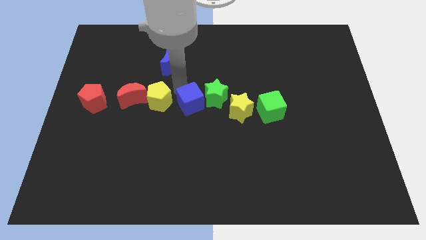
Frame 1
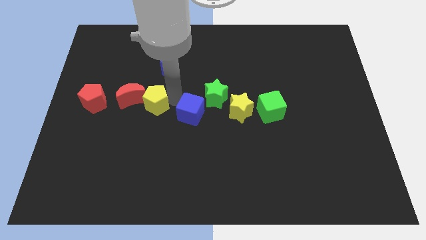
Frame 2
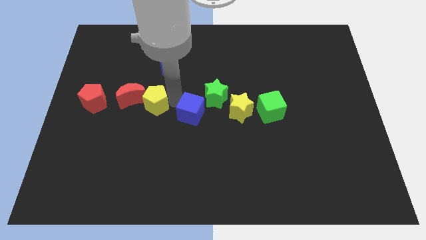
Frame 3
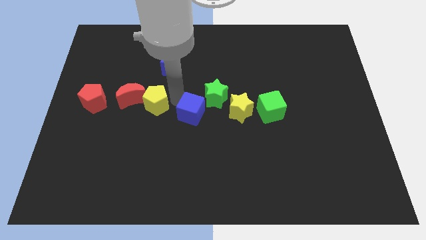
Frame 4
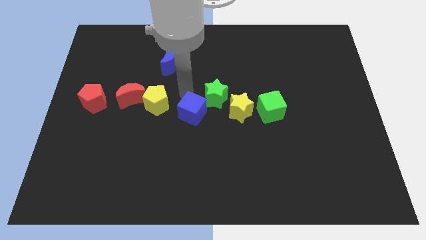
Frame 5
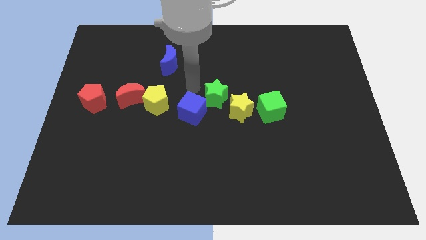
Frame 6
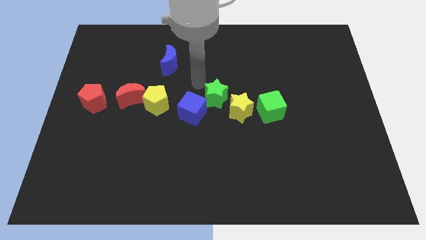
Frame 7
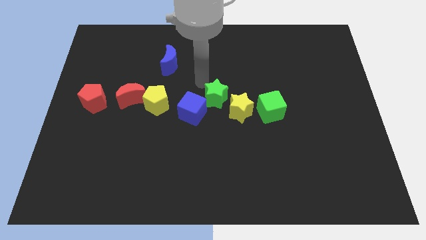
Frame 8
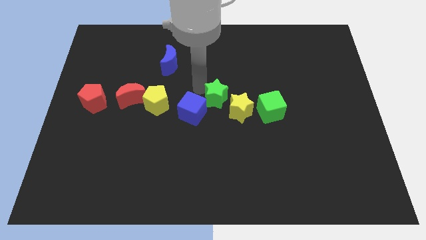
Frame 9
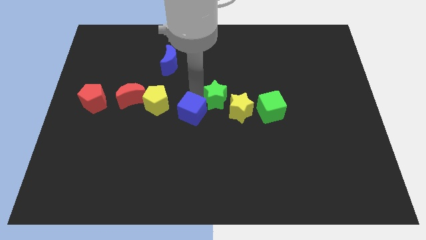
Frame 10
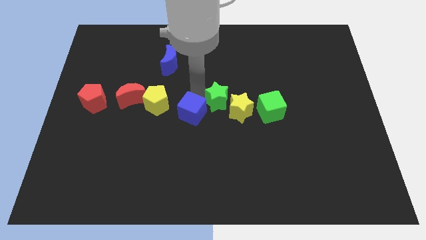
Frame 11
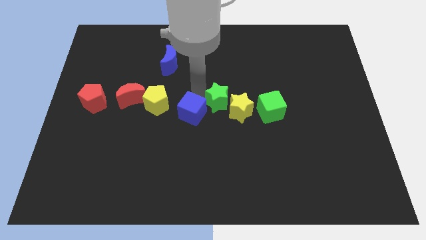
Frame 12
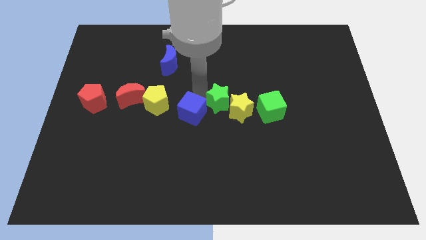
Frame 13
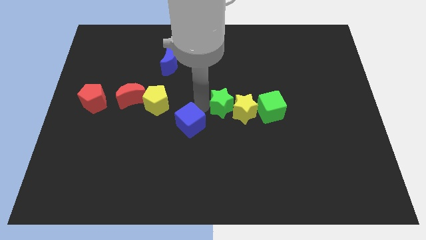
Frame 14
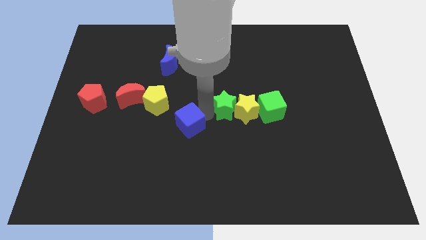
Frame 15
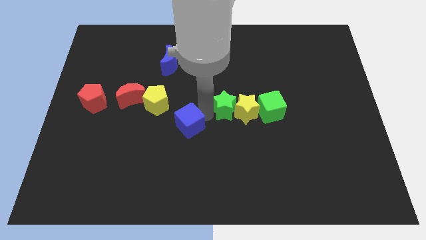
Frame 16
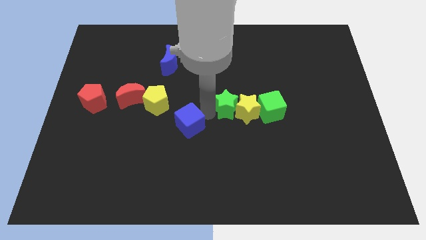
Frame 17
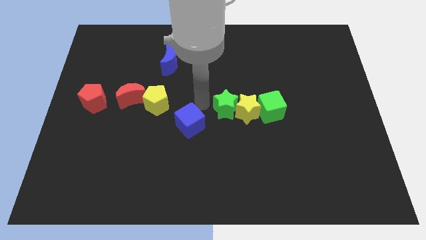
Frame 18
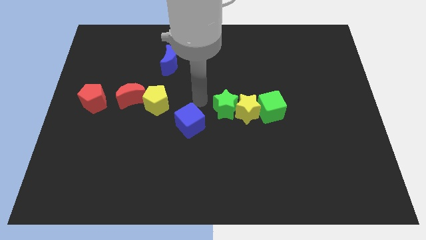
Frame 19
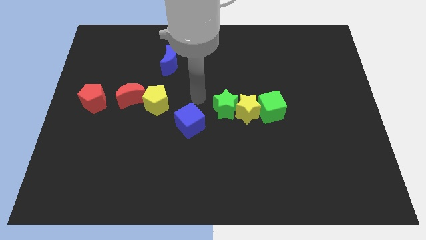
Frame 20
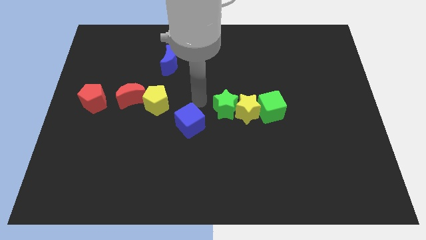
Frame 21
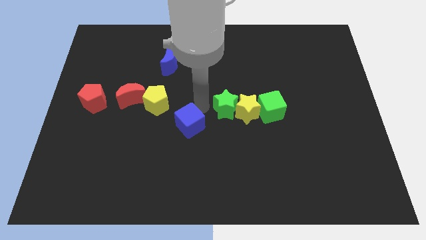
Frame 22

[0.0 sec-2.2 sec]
move blue cube down a bit

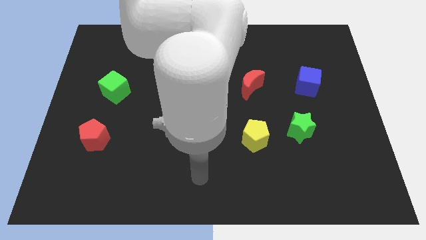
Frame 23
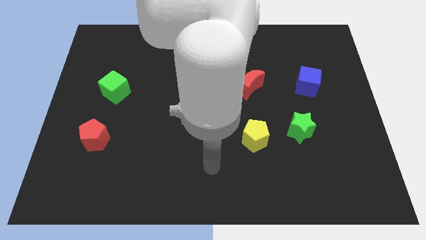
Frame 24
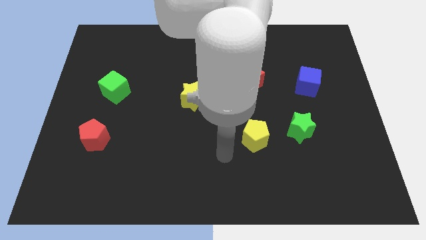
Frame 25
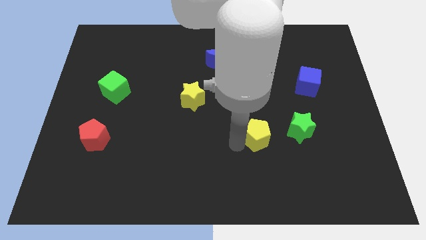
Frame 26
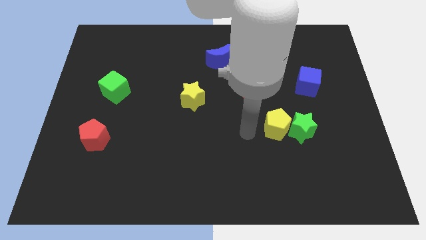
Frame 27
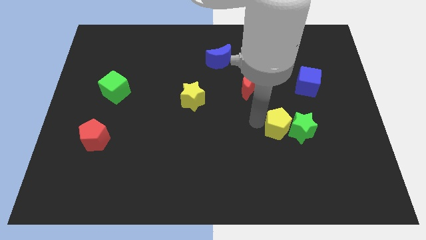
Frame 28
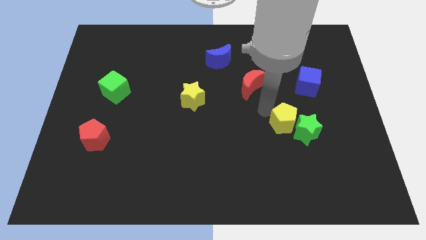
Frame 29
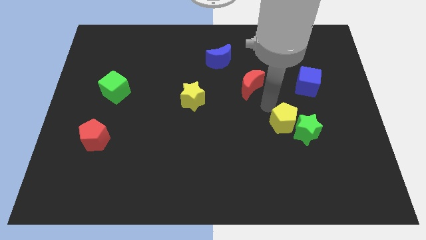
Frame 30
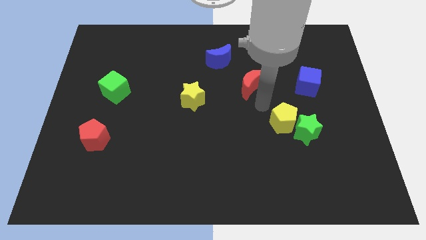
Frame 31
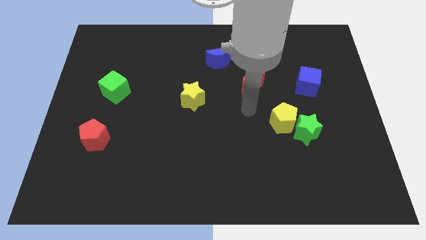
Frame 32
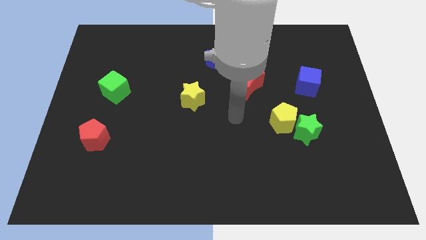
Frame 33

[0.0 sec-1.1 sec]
push the yellow pentagon into the green star

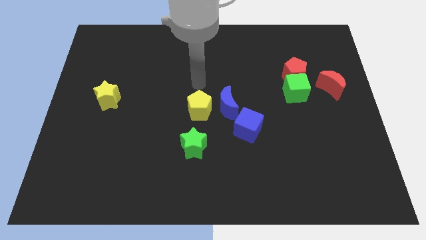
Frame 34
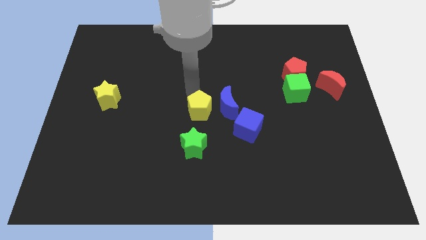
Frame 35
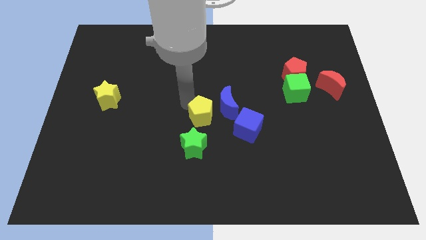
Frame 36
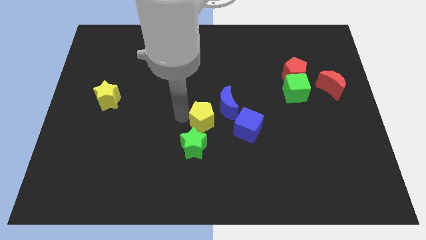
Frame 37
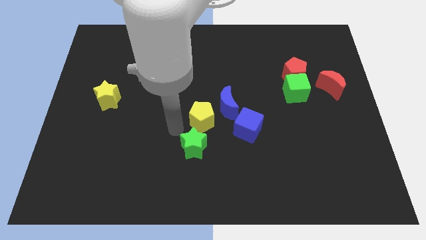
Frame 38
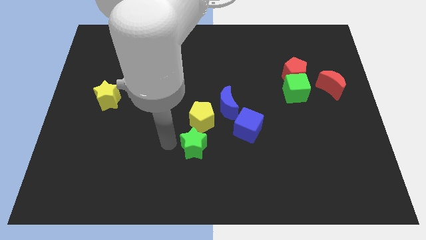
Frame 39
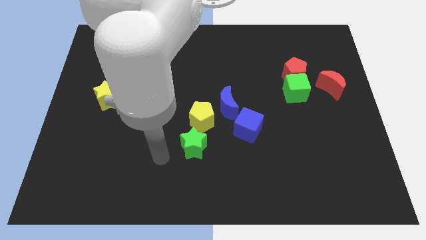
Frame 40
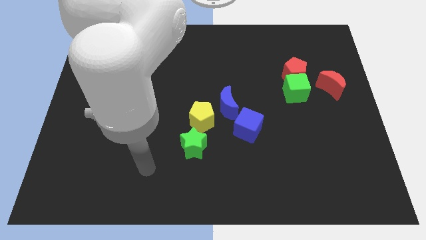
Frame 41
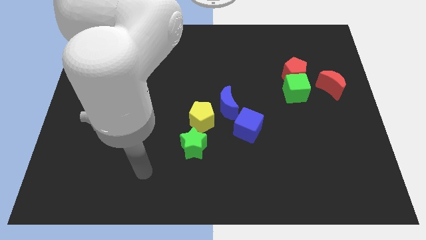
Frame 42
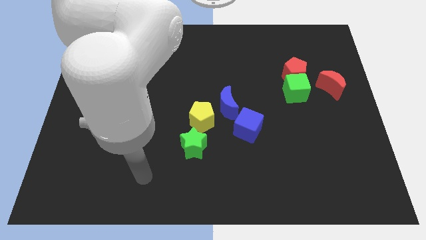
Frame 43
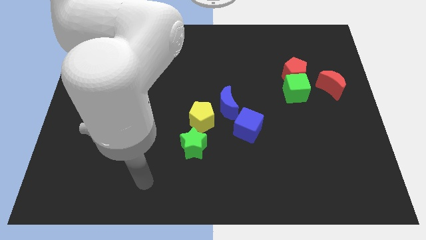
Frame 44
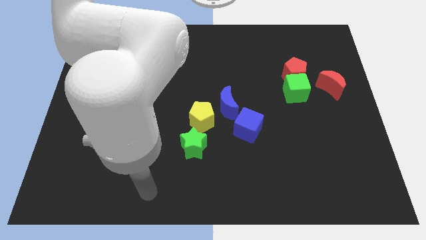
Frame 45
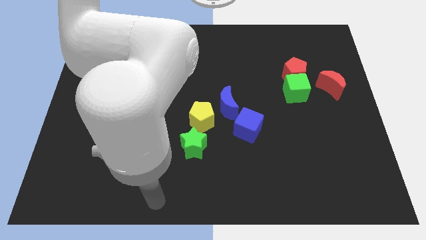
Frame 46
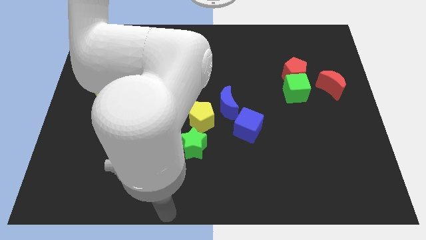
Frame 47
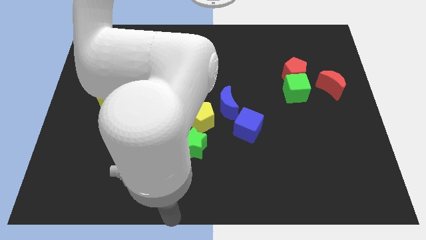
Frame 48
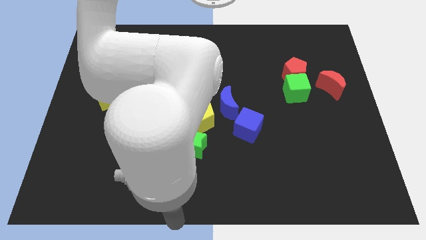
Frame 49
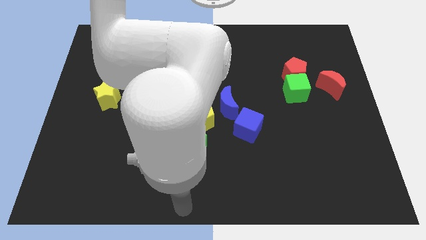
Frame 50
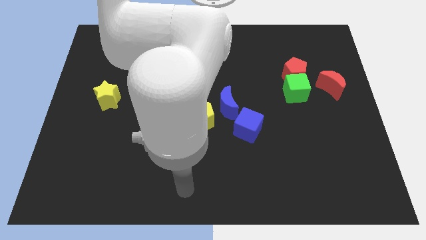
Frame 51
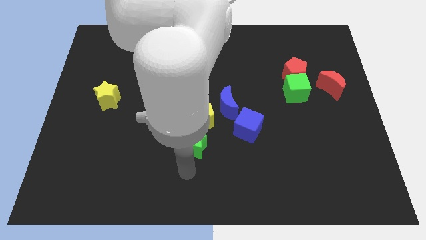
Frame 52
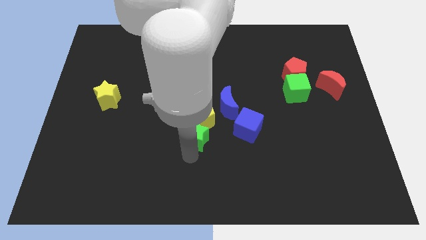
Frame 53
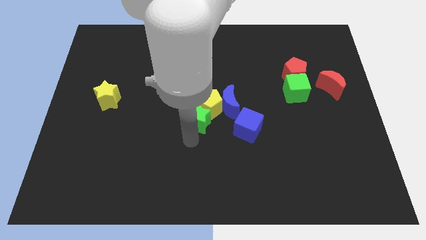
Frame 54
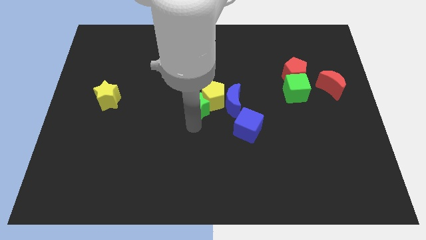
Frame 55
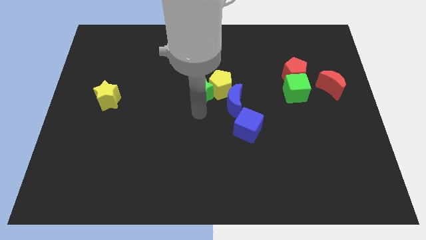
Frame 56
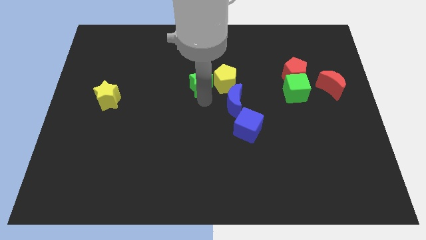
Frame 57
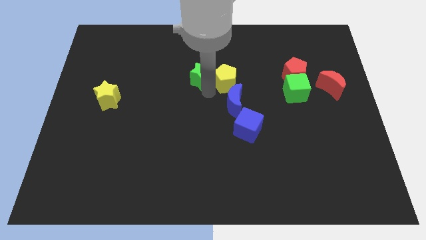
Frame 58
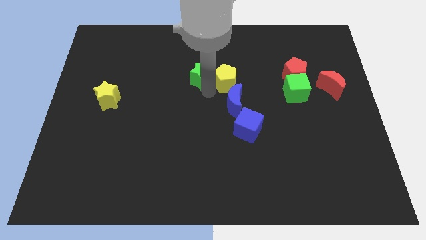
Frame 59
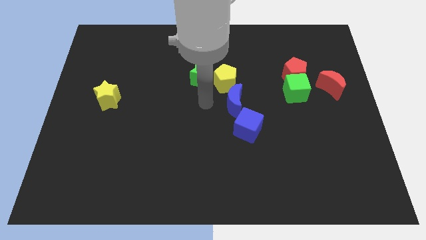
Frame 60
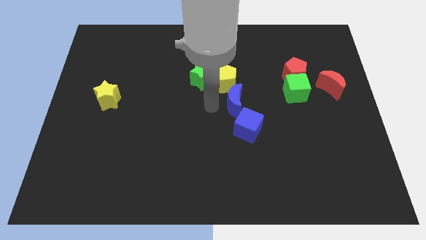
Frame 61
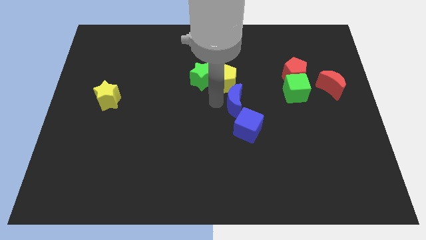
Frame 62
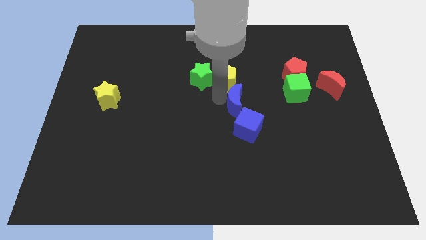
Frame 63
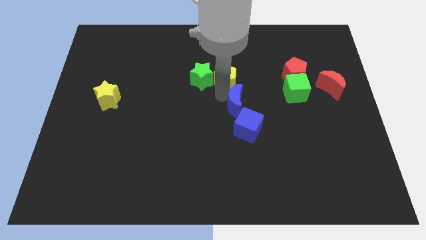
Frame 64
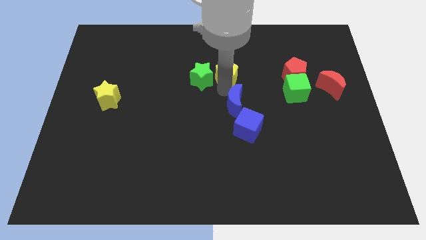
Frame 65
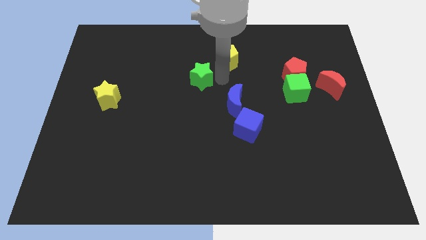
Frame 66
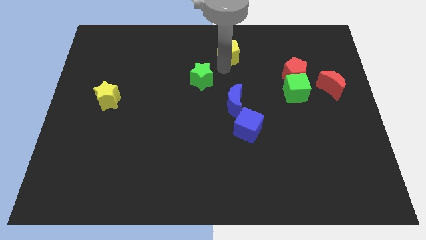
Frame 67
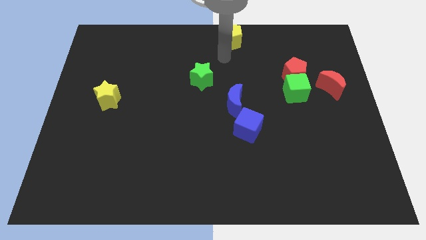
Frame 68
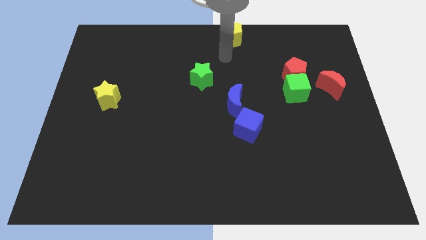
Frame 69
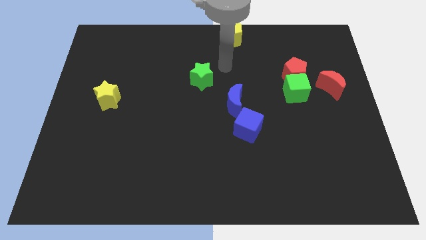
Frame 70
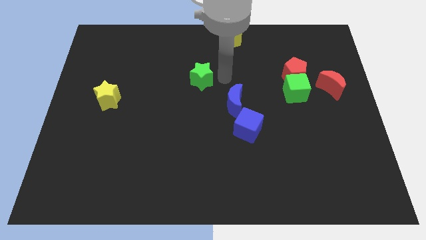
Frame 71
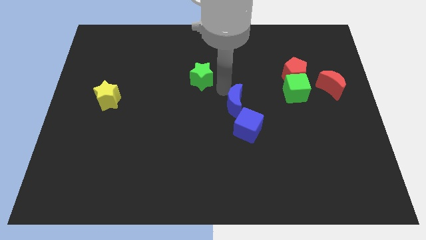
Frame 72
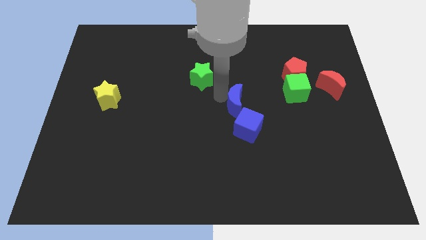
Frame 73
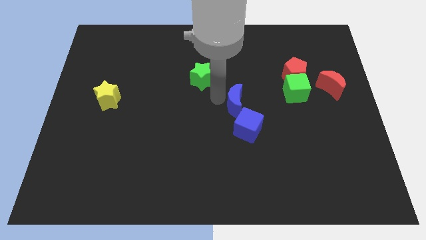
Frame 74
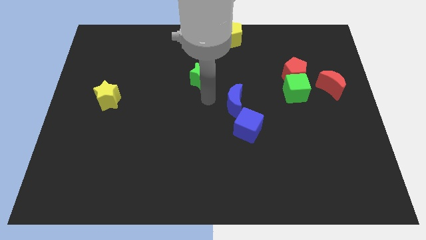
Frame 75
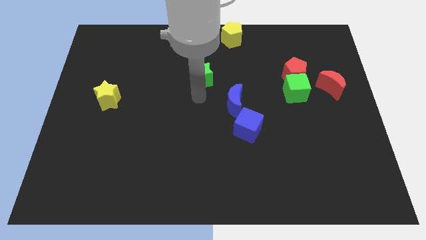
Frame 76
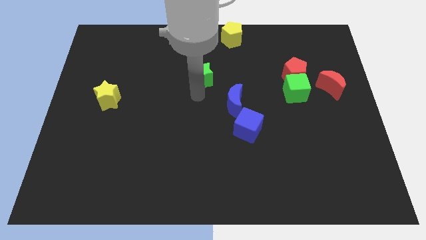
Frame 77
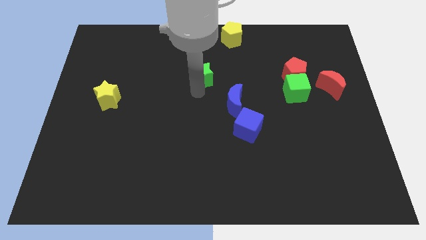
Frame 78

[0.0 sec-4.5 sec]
move yellow pentagon with green star towards the top center

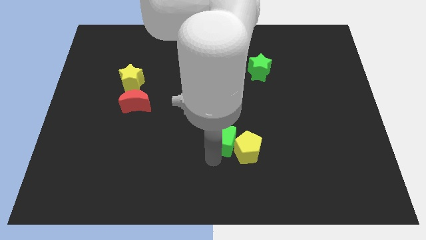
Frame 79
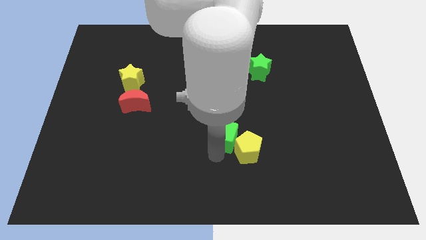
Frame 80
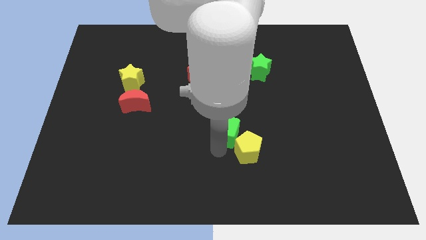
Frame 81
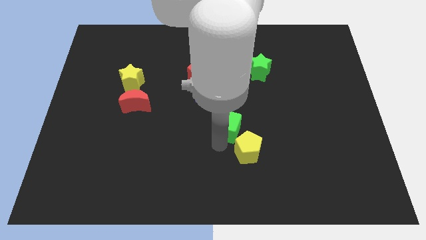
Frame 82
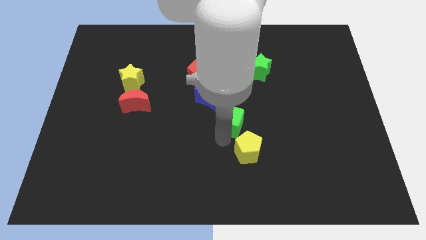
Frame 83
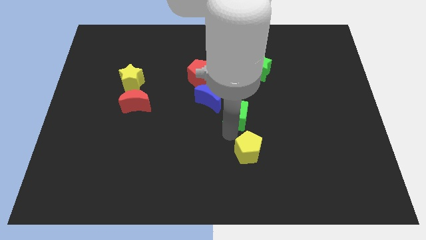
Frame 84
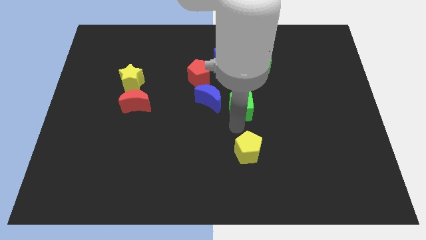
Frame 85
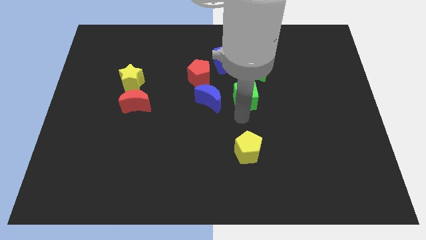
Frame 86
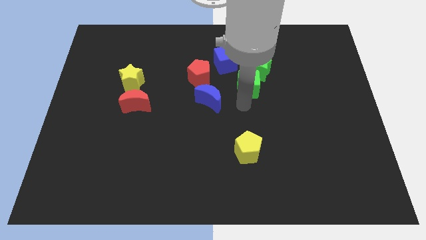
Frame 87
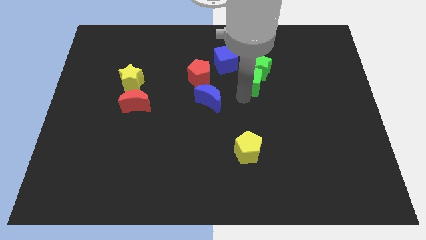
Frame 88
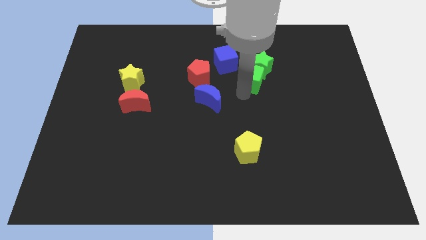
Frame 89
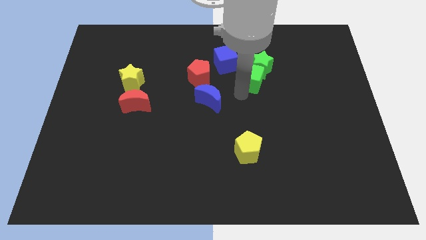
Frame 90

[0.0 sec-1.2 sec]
separate the green cube and yellow pentagon

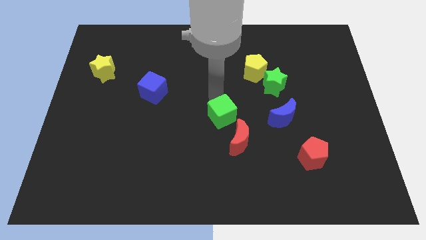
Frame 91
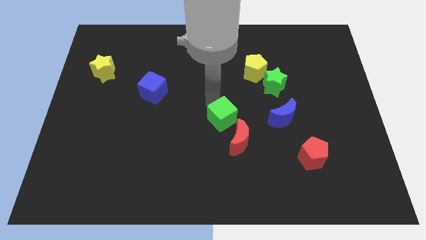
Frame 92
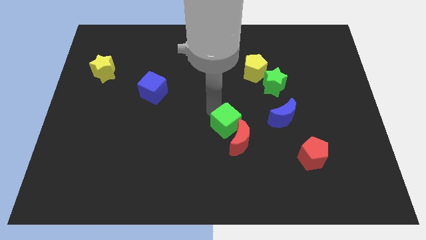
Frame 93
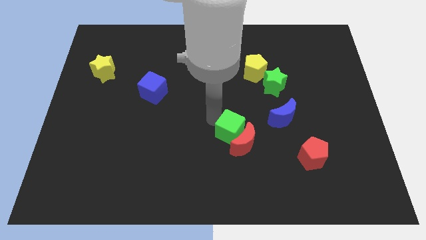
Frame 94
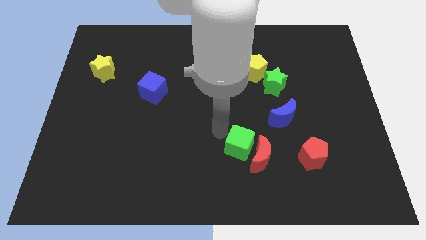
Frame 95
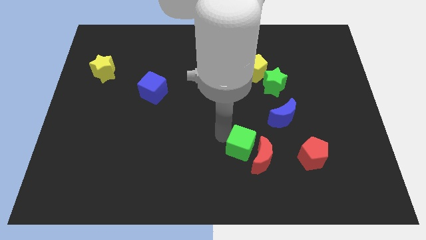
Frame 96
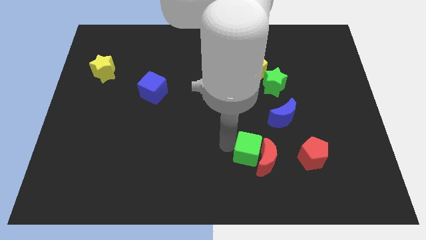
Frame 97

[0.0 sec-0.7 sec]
push the green cube into the red moon
